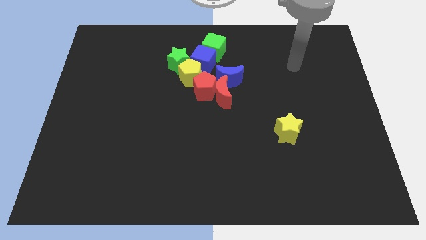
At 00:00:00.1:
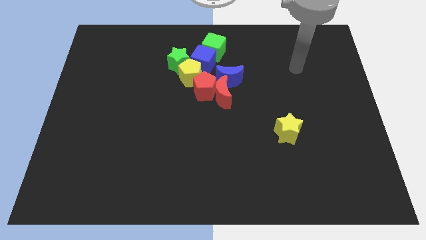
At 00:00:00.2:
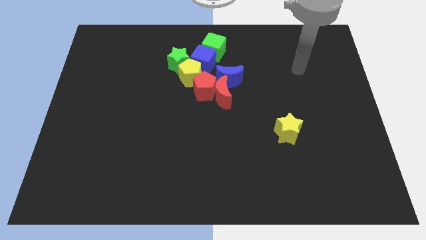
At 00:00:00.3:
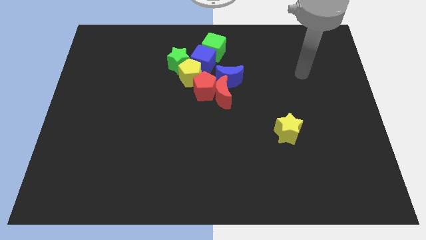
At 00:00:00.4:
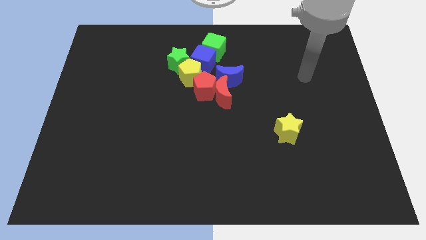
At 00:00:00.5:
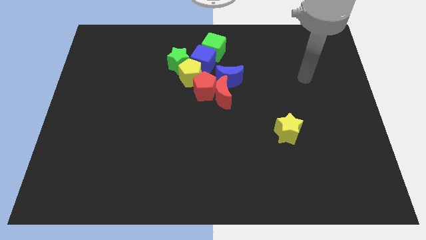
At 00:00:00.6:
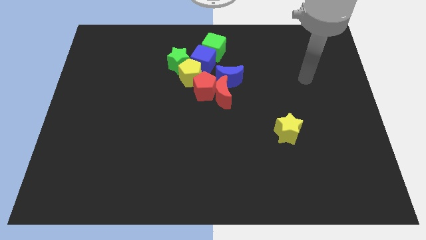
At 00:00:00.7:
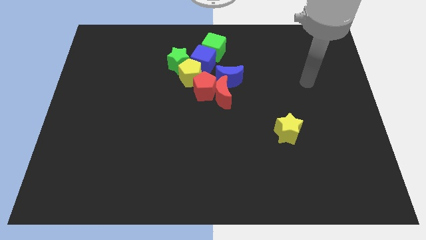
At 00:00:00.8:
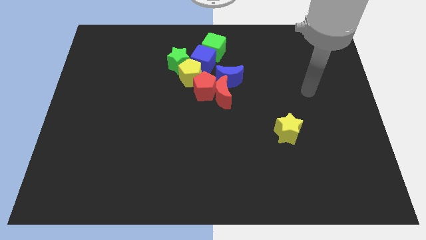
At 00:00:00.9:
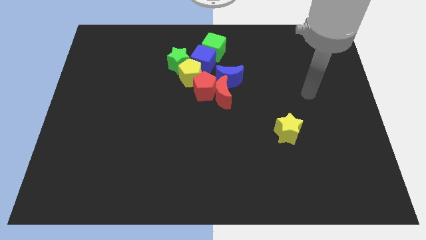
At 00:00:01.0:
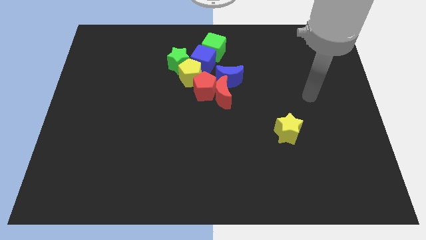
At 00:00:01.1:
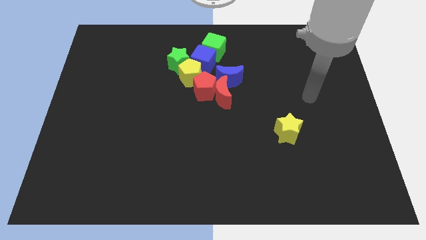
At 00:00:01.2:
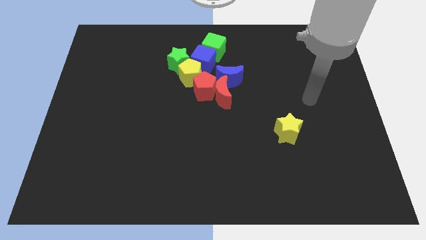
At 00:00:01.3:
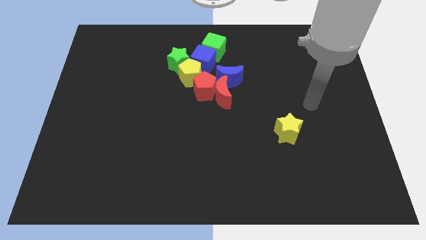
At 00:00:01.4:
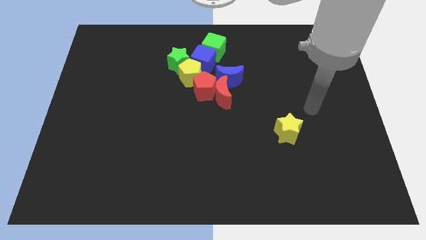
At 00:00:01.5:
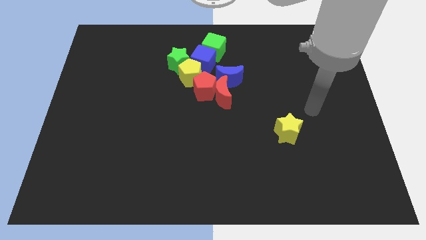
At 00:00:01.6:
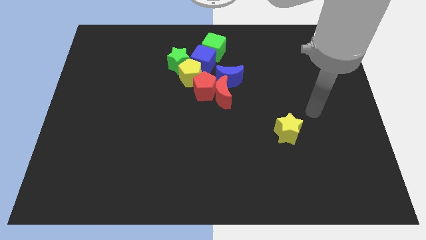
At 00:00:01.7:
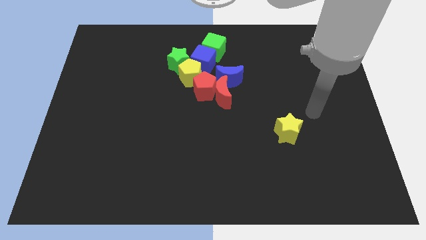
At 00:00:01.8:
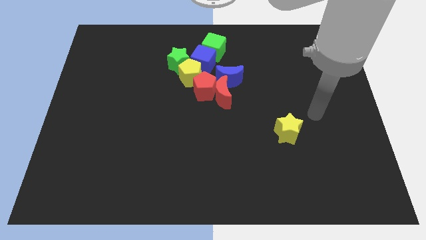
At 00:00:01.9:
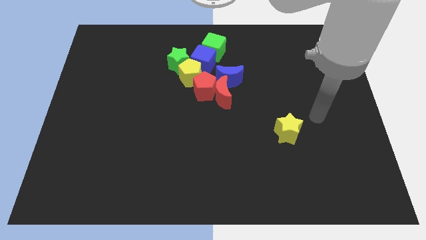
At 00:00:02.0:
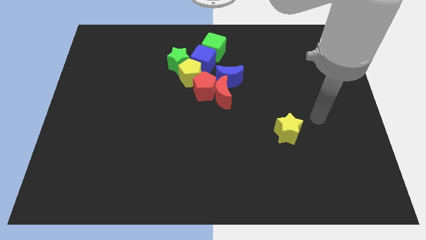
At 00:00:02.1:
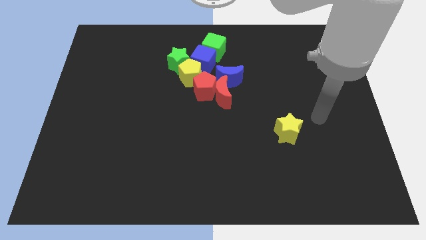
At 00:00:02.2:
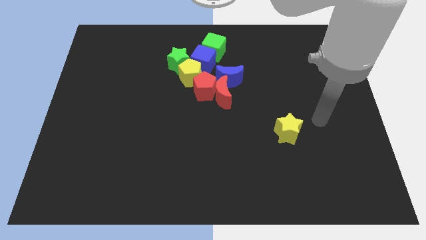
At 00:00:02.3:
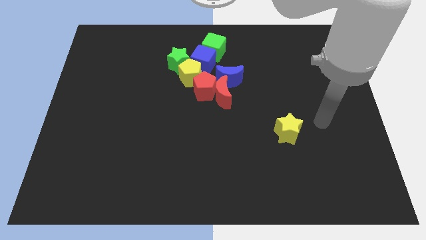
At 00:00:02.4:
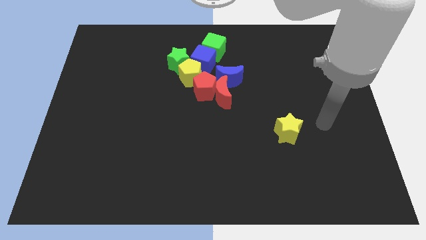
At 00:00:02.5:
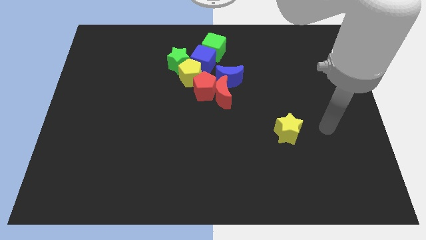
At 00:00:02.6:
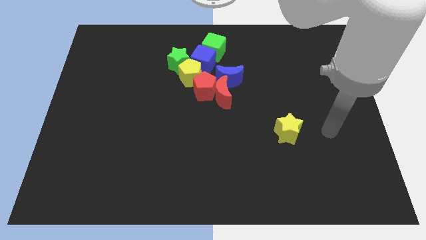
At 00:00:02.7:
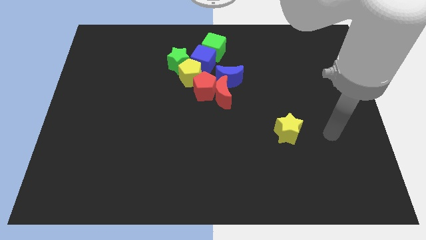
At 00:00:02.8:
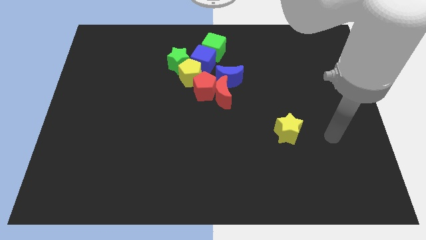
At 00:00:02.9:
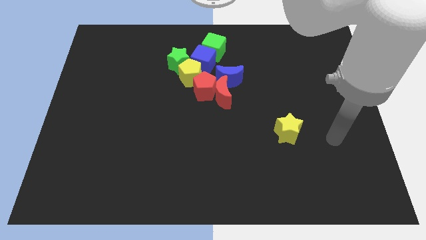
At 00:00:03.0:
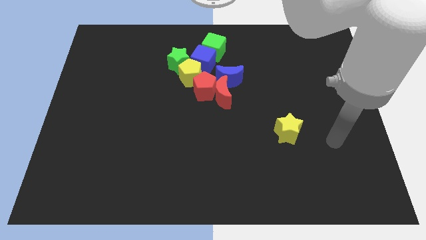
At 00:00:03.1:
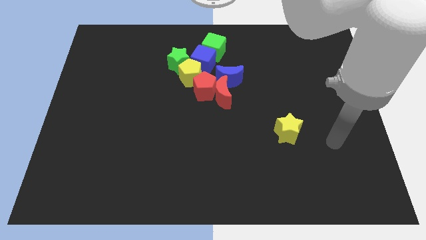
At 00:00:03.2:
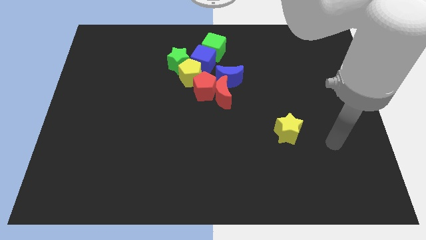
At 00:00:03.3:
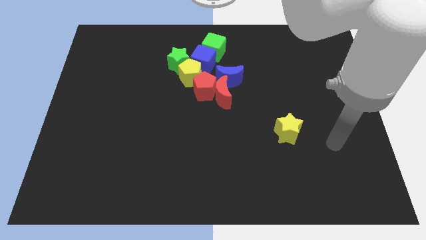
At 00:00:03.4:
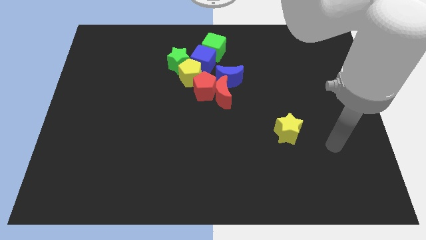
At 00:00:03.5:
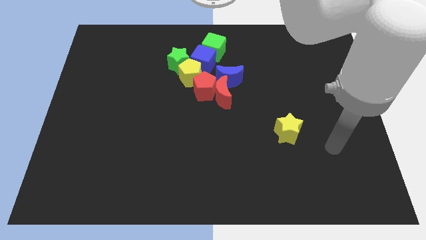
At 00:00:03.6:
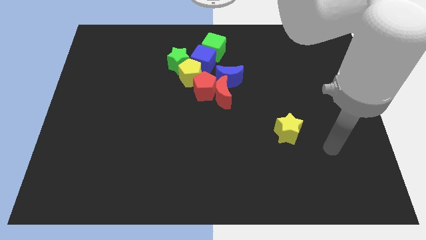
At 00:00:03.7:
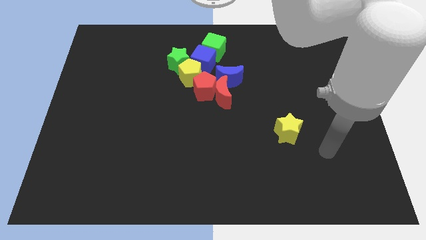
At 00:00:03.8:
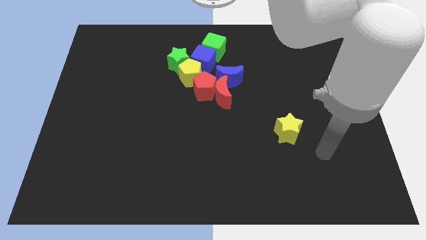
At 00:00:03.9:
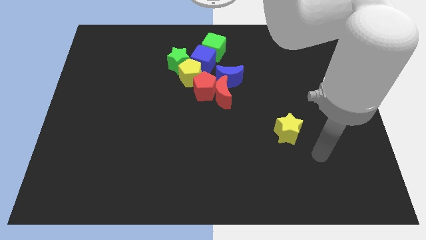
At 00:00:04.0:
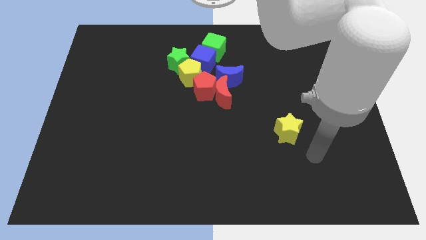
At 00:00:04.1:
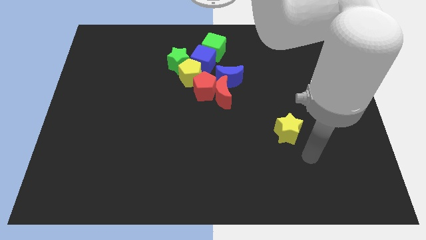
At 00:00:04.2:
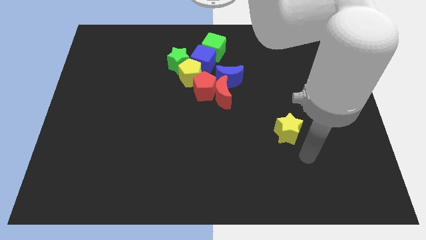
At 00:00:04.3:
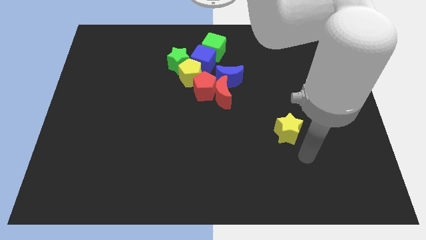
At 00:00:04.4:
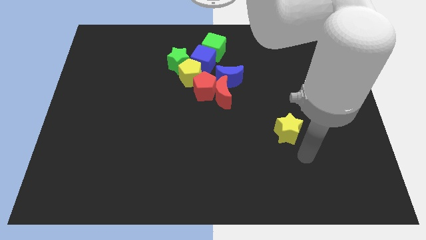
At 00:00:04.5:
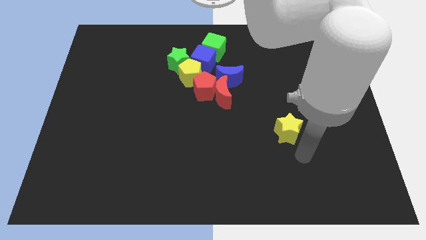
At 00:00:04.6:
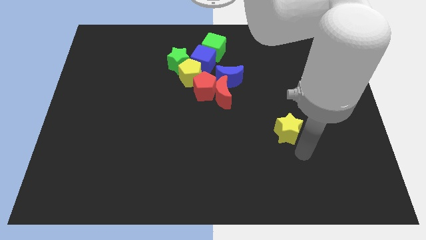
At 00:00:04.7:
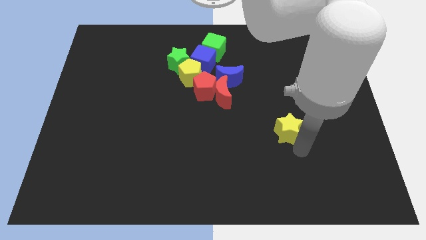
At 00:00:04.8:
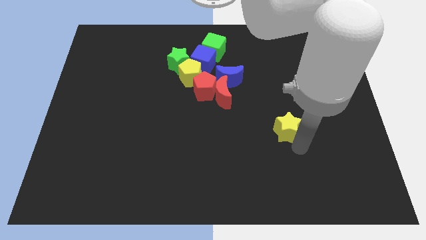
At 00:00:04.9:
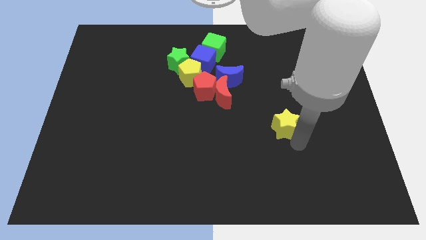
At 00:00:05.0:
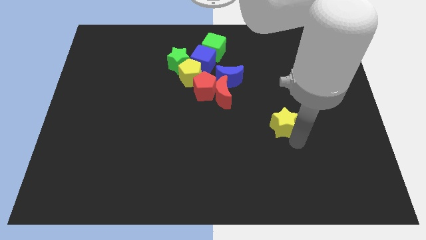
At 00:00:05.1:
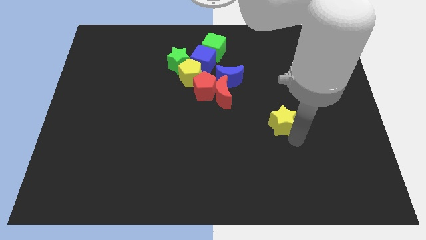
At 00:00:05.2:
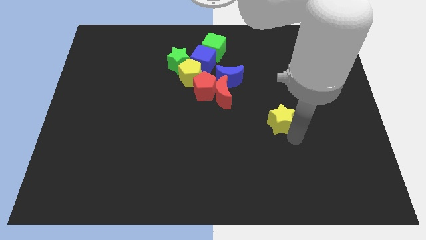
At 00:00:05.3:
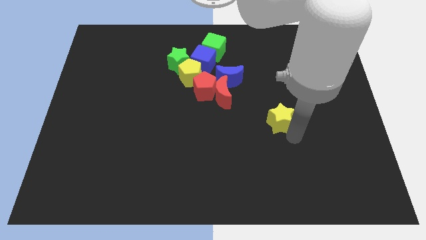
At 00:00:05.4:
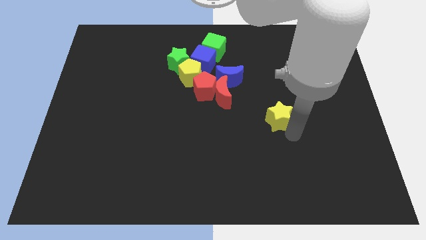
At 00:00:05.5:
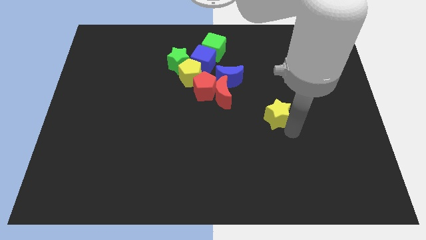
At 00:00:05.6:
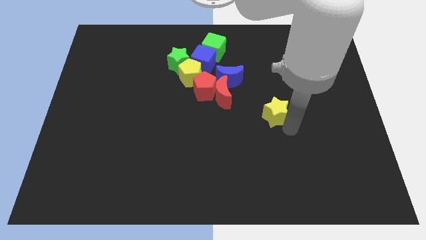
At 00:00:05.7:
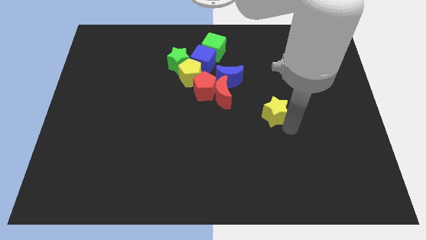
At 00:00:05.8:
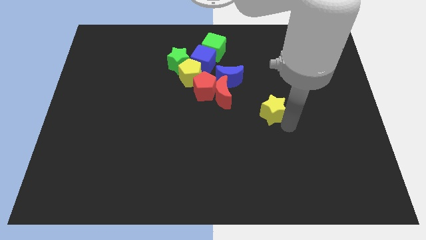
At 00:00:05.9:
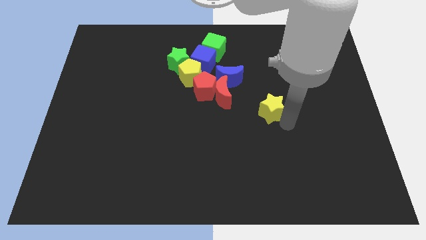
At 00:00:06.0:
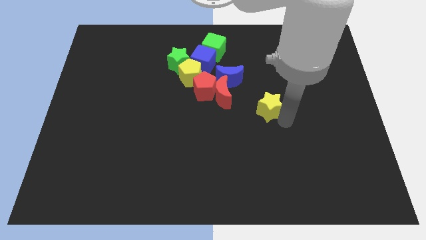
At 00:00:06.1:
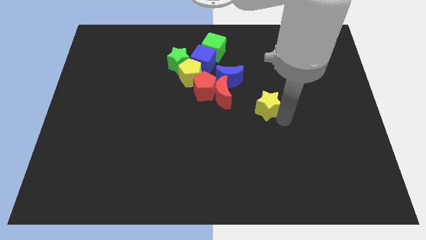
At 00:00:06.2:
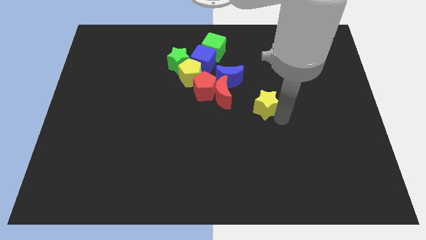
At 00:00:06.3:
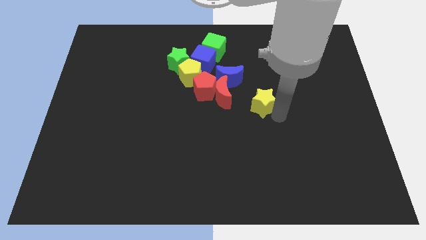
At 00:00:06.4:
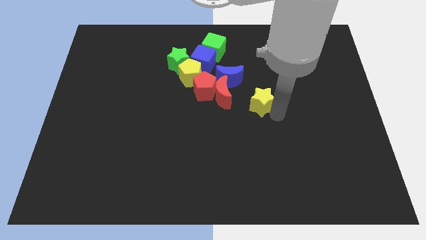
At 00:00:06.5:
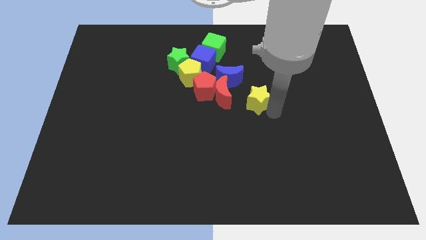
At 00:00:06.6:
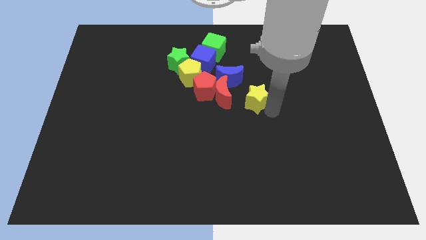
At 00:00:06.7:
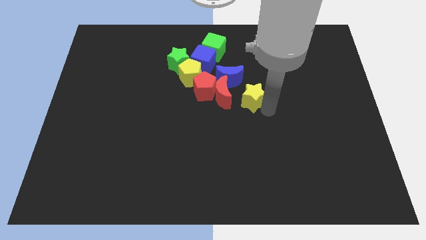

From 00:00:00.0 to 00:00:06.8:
push the yellow star to the right of the red crescent

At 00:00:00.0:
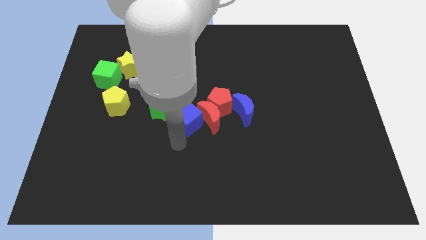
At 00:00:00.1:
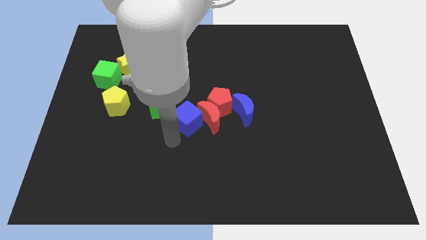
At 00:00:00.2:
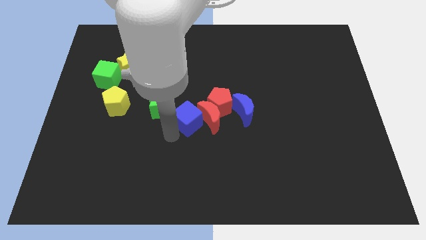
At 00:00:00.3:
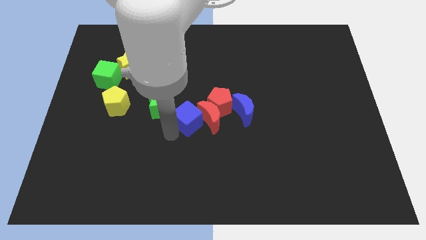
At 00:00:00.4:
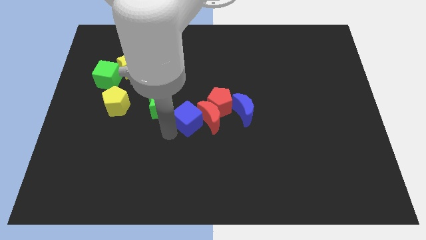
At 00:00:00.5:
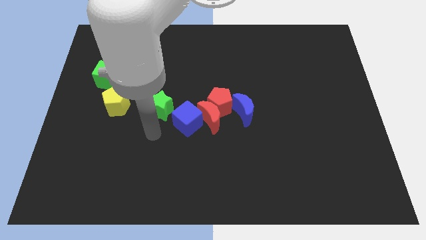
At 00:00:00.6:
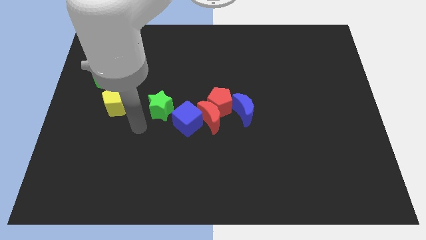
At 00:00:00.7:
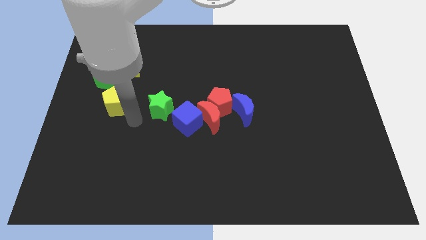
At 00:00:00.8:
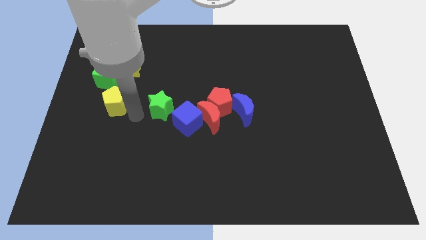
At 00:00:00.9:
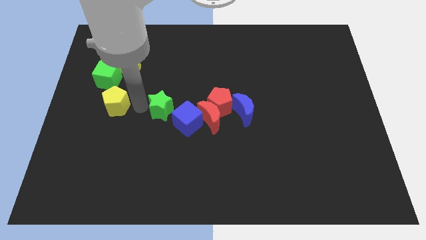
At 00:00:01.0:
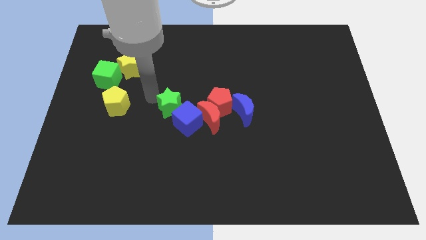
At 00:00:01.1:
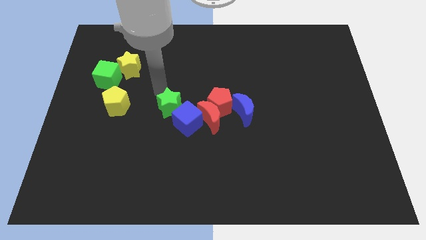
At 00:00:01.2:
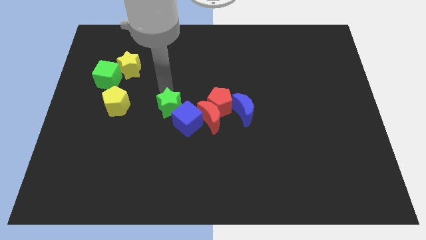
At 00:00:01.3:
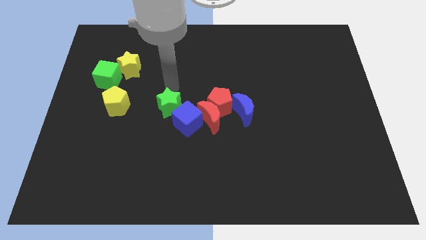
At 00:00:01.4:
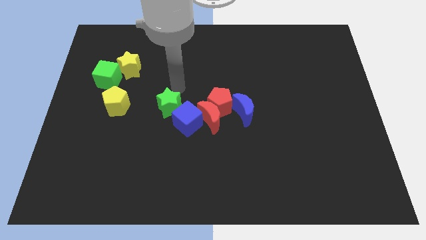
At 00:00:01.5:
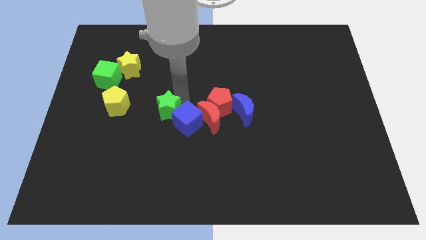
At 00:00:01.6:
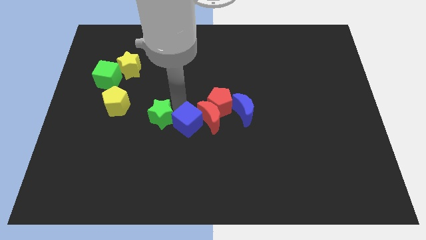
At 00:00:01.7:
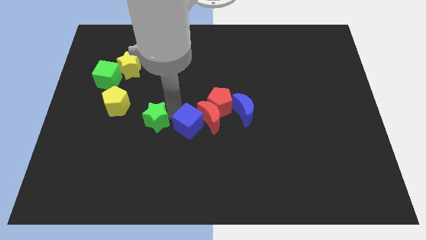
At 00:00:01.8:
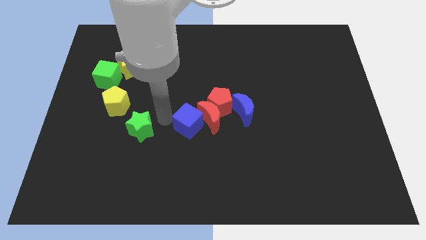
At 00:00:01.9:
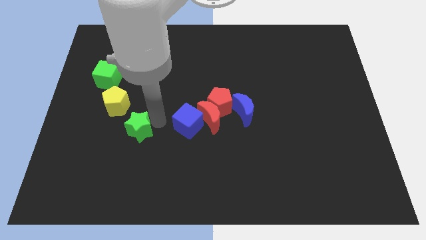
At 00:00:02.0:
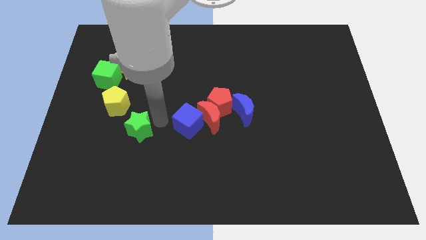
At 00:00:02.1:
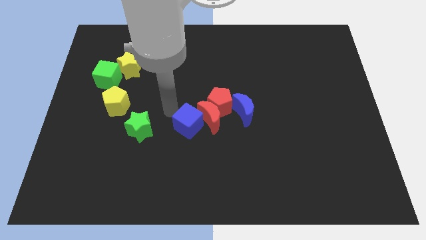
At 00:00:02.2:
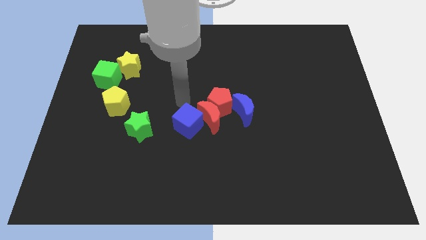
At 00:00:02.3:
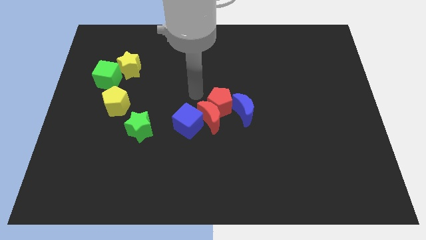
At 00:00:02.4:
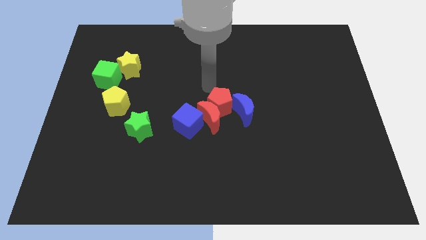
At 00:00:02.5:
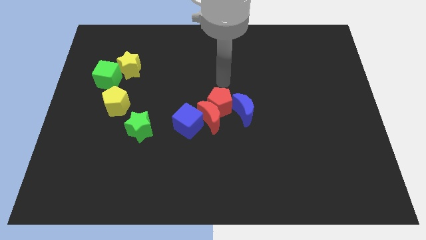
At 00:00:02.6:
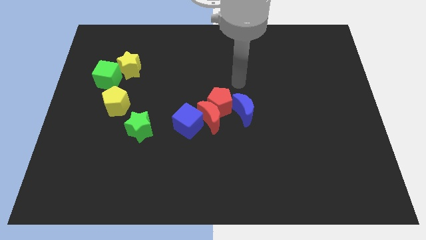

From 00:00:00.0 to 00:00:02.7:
move the green star to the bottom right of the yellow pentagon
